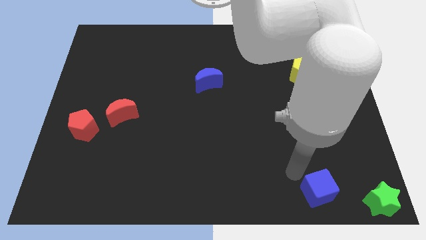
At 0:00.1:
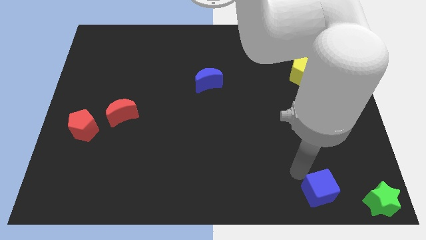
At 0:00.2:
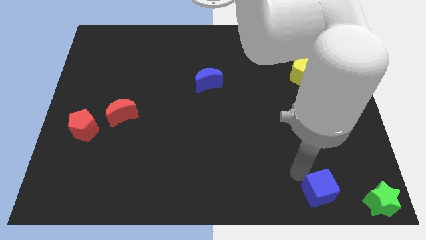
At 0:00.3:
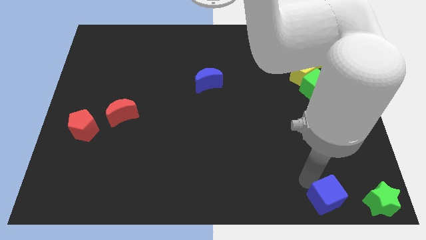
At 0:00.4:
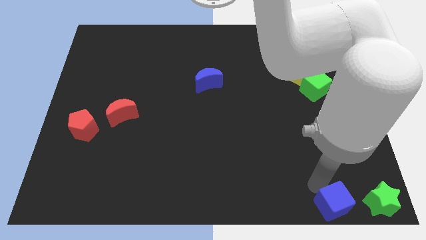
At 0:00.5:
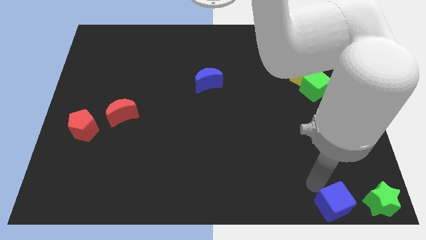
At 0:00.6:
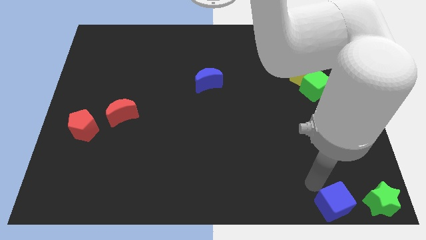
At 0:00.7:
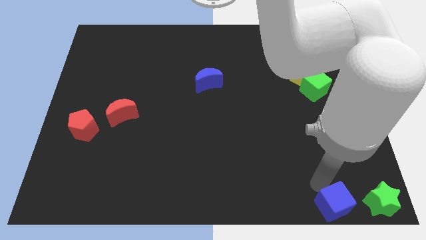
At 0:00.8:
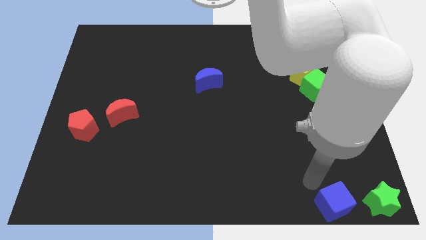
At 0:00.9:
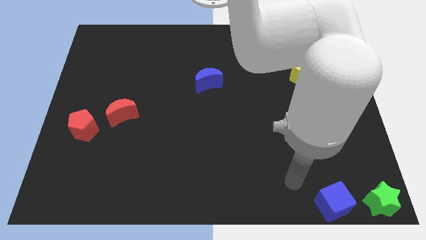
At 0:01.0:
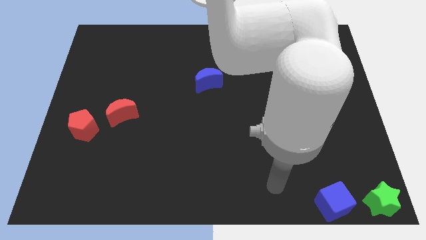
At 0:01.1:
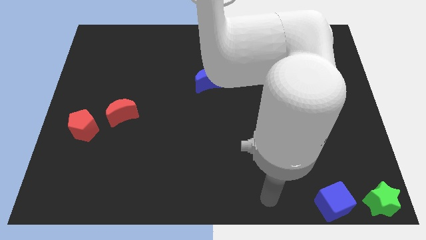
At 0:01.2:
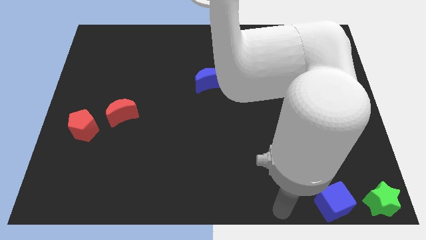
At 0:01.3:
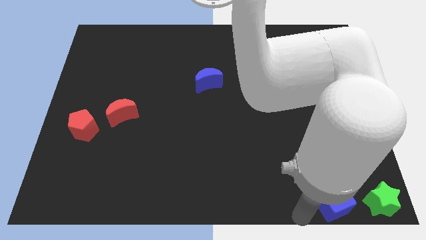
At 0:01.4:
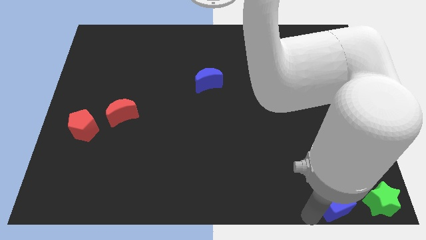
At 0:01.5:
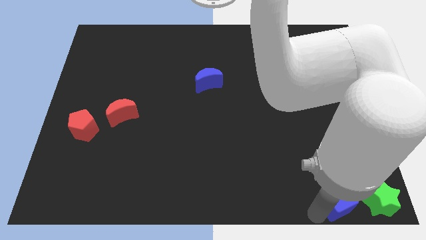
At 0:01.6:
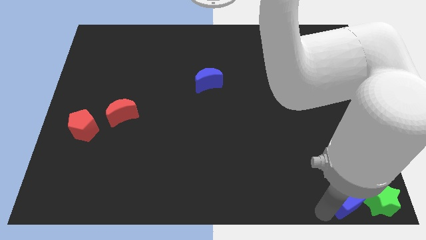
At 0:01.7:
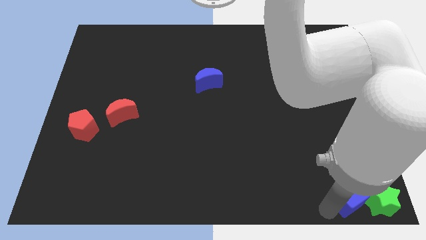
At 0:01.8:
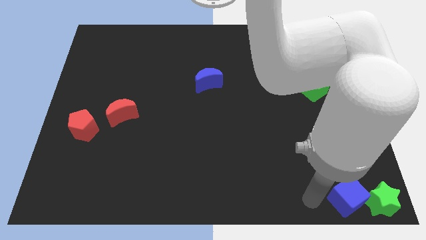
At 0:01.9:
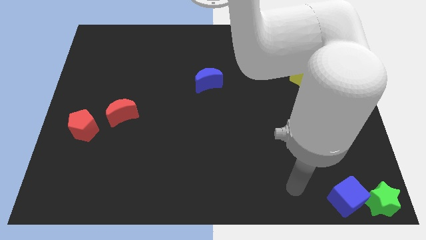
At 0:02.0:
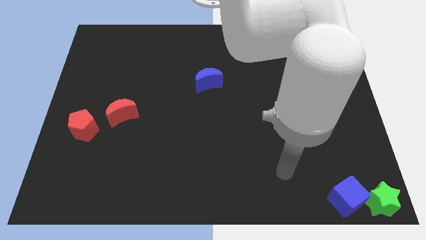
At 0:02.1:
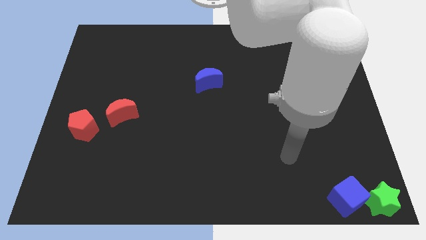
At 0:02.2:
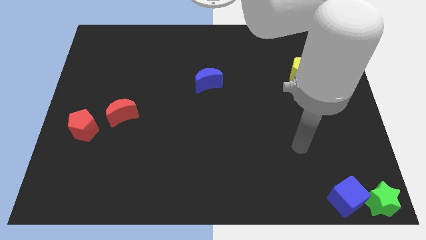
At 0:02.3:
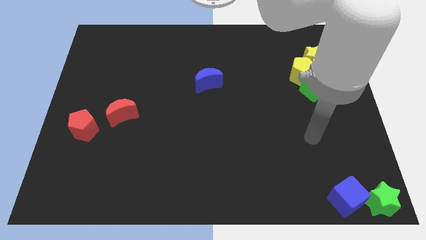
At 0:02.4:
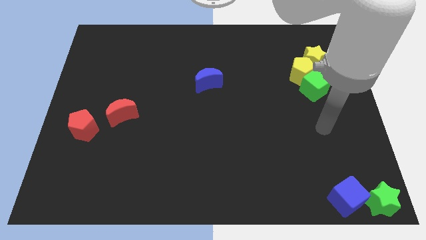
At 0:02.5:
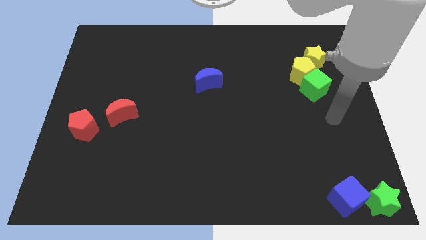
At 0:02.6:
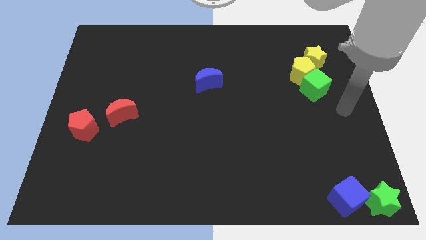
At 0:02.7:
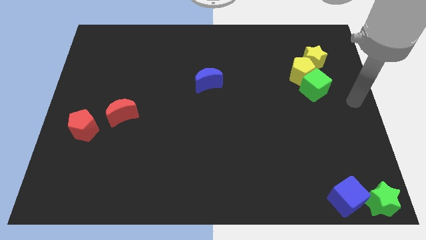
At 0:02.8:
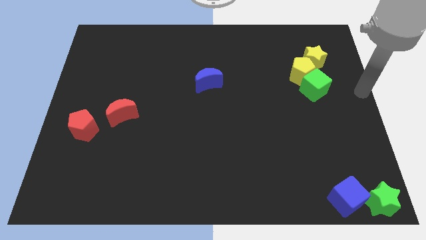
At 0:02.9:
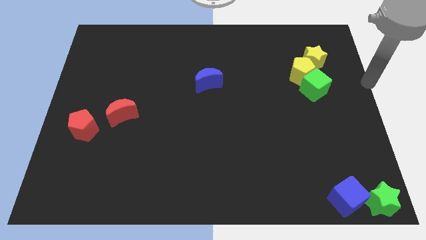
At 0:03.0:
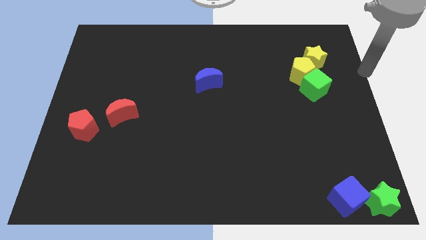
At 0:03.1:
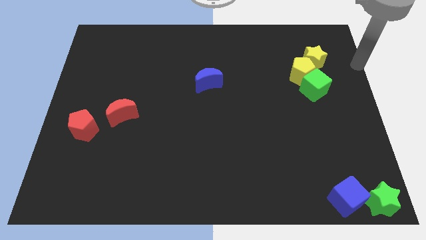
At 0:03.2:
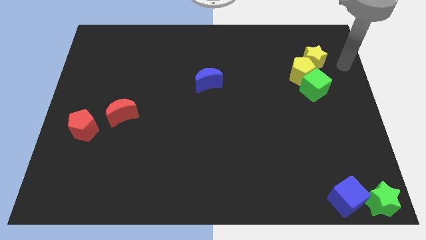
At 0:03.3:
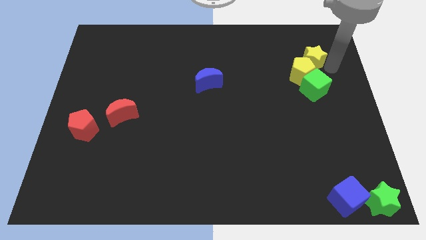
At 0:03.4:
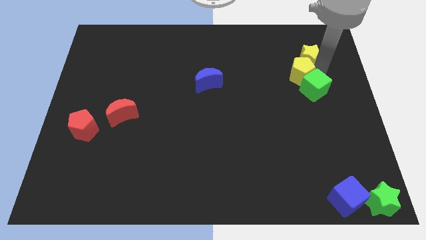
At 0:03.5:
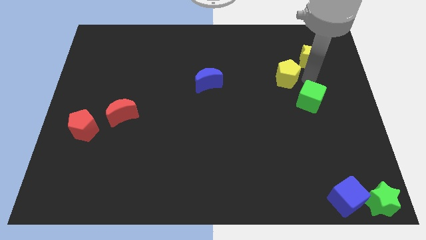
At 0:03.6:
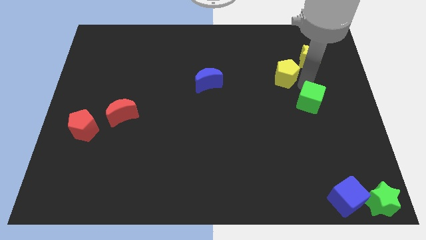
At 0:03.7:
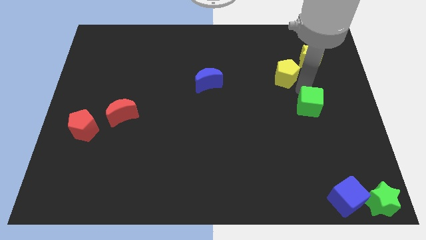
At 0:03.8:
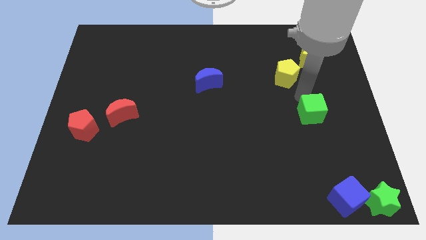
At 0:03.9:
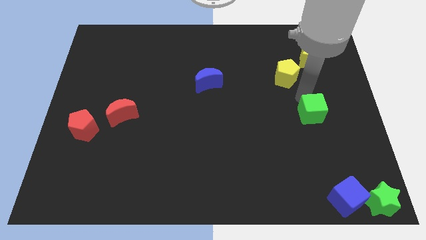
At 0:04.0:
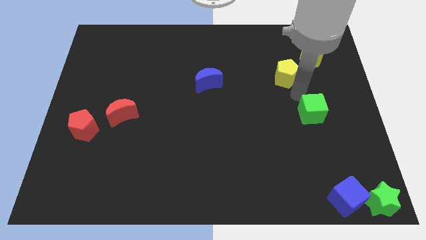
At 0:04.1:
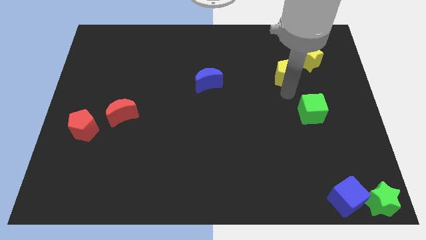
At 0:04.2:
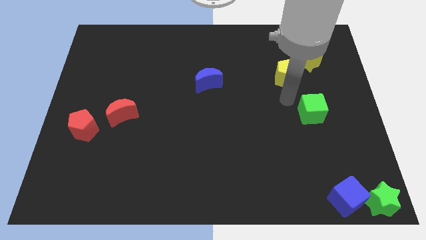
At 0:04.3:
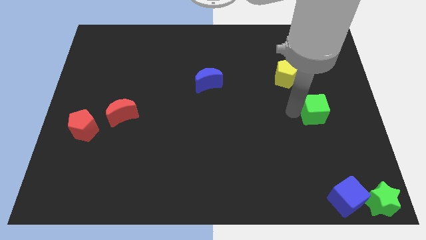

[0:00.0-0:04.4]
place the blue cube close to the green star

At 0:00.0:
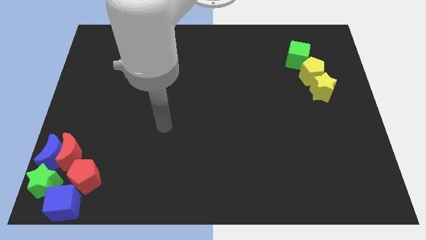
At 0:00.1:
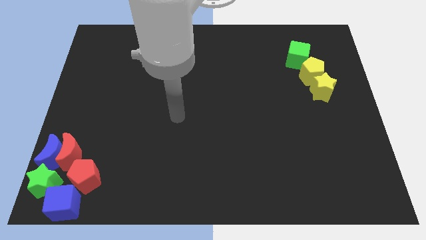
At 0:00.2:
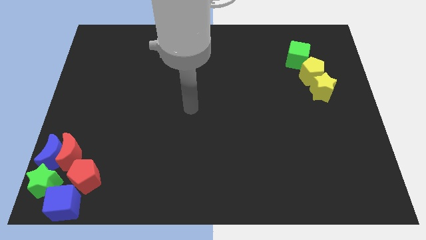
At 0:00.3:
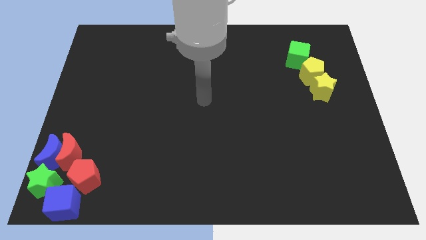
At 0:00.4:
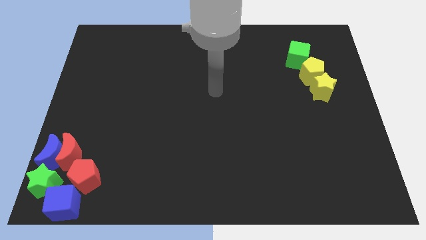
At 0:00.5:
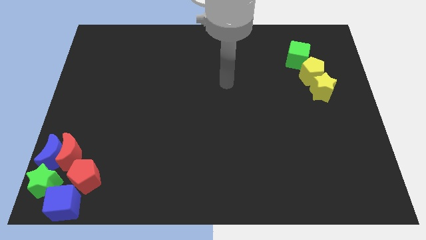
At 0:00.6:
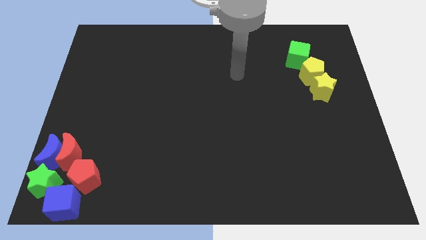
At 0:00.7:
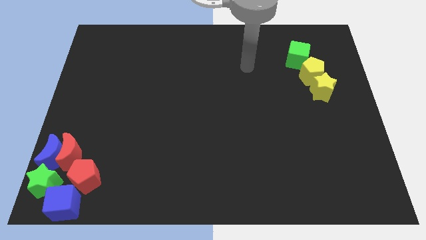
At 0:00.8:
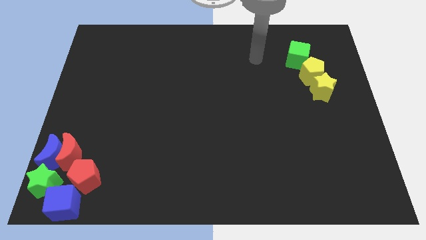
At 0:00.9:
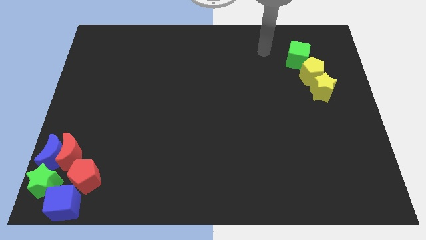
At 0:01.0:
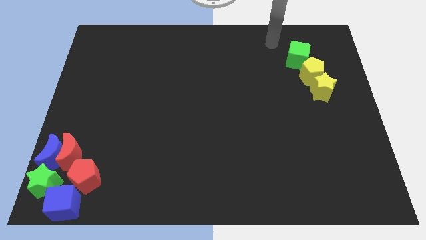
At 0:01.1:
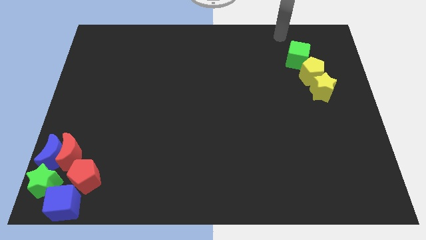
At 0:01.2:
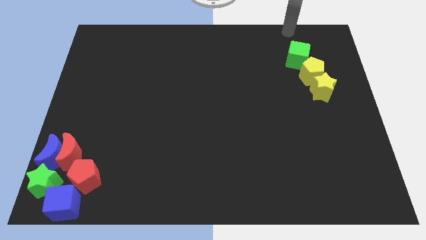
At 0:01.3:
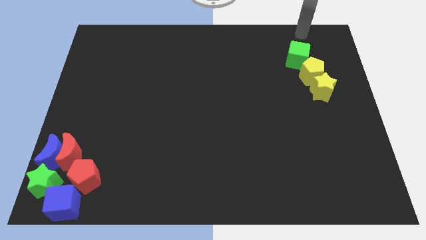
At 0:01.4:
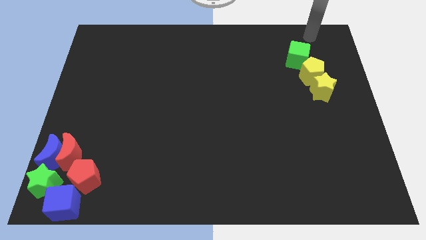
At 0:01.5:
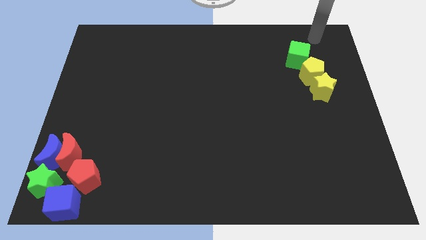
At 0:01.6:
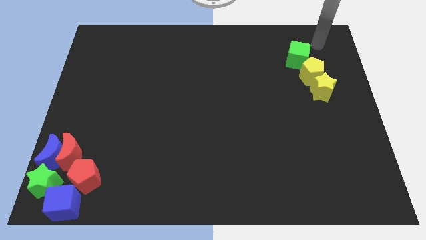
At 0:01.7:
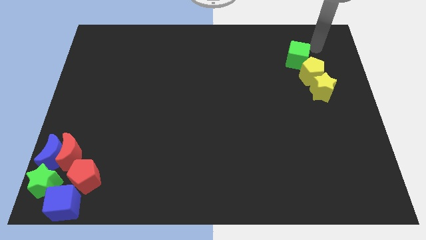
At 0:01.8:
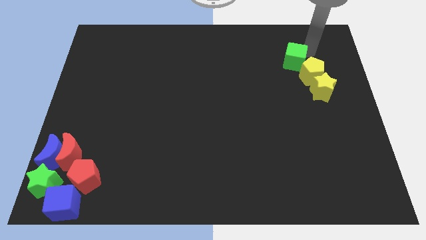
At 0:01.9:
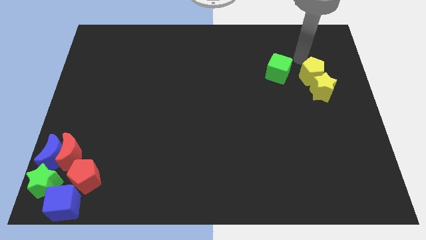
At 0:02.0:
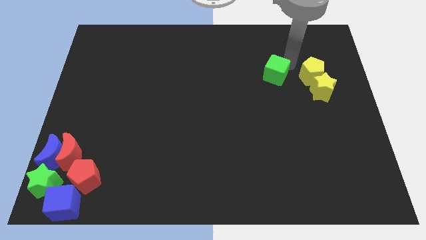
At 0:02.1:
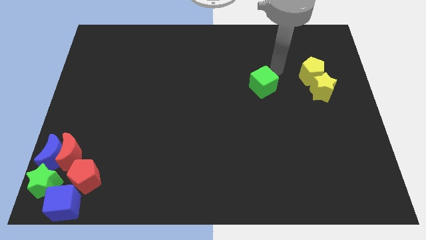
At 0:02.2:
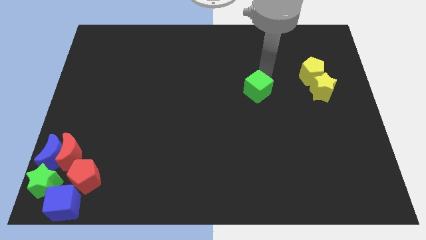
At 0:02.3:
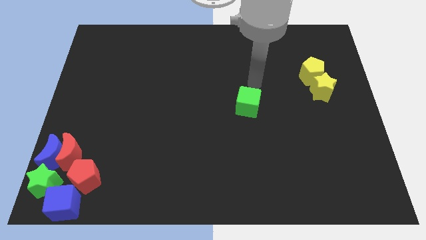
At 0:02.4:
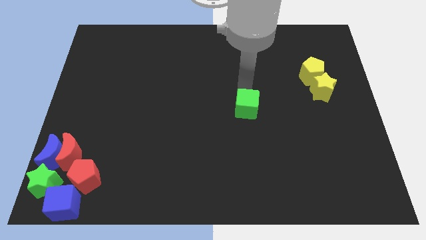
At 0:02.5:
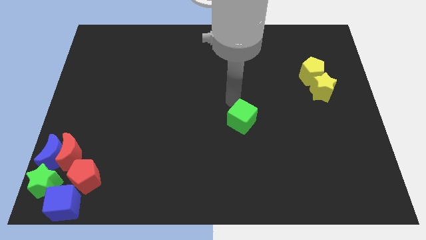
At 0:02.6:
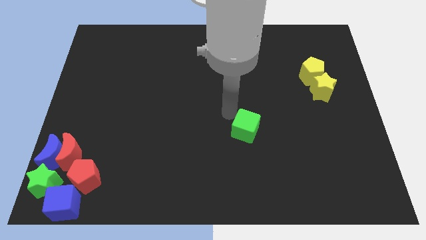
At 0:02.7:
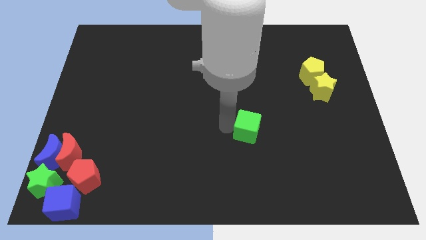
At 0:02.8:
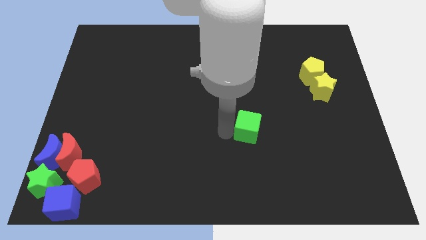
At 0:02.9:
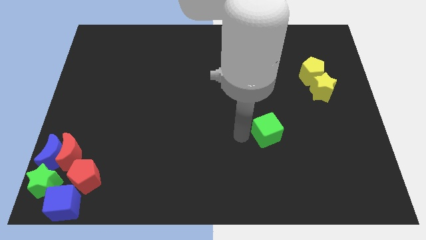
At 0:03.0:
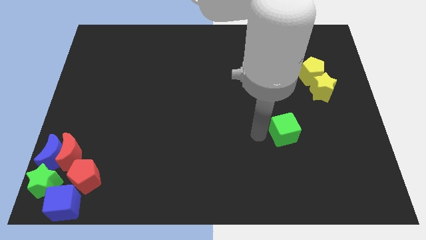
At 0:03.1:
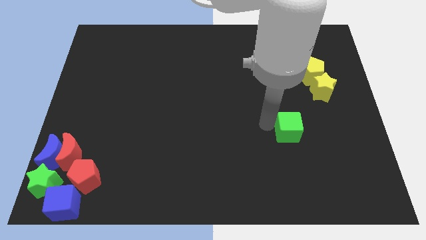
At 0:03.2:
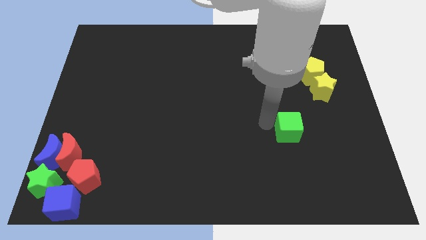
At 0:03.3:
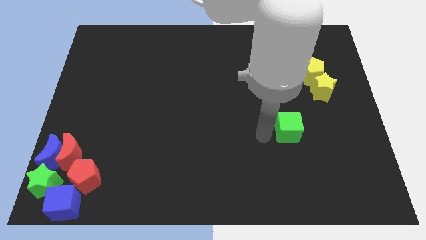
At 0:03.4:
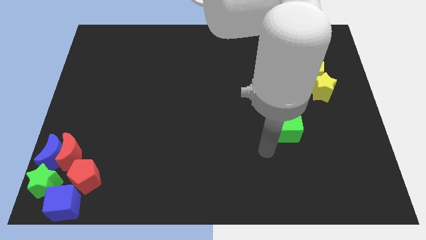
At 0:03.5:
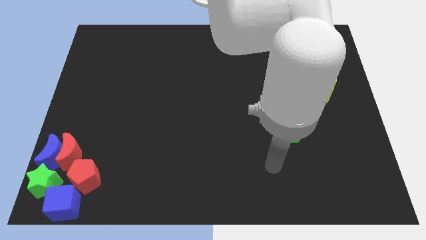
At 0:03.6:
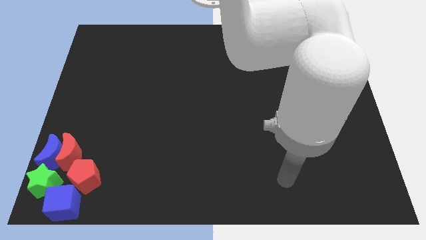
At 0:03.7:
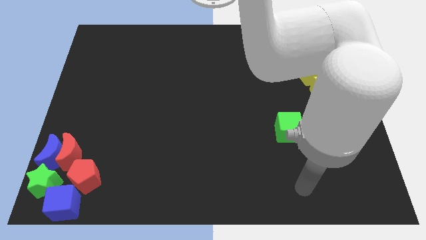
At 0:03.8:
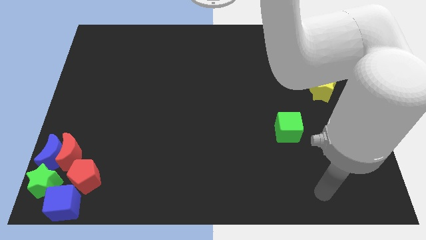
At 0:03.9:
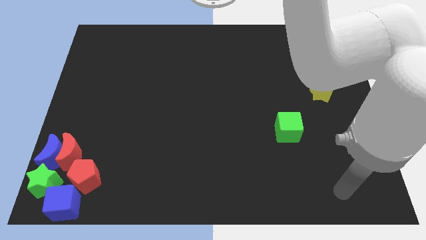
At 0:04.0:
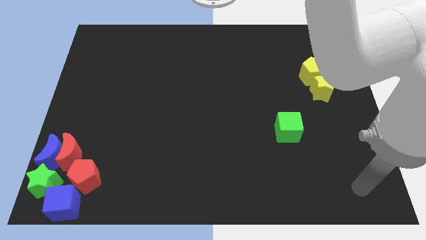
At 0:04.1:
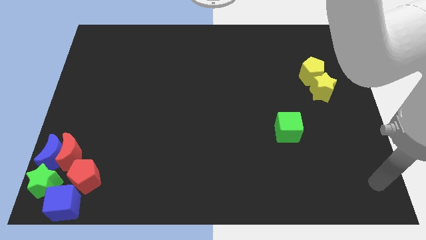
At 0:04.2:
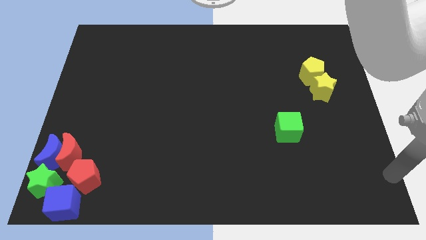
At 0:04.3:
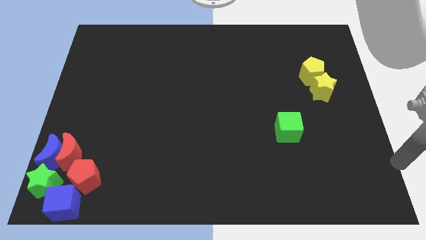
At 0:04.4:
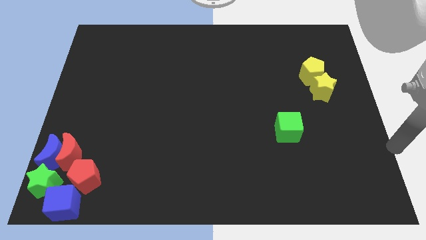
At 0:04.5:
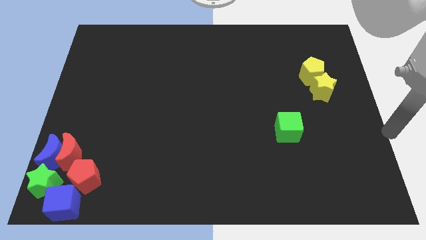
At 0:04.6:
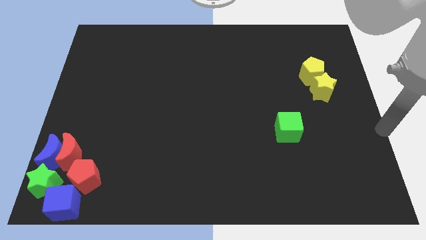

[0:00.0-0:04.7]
place the green cube to the bottom left of the yellow star
